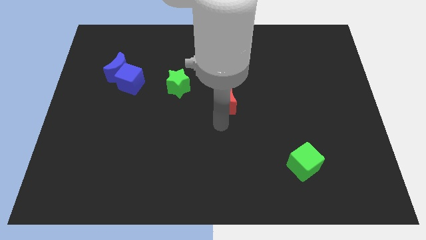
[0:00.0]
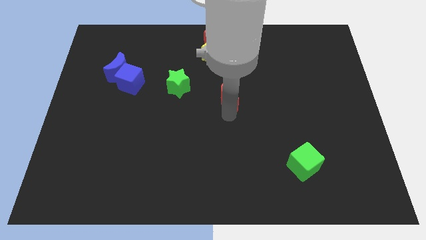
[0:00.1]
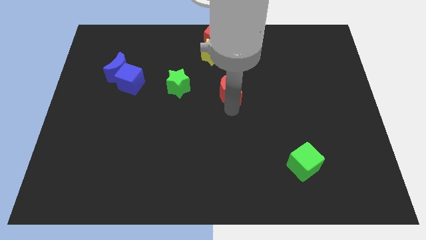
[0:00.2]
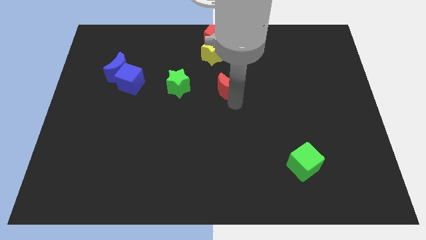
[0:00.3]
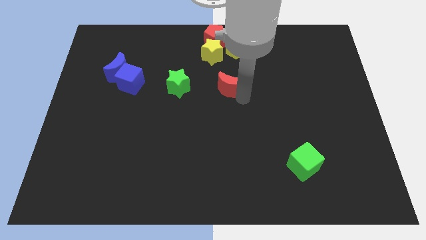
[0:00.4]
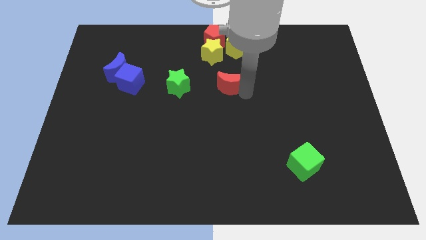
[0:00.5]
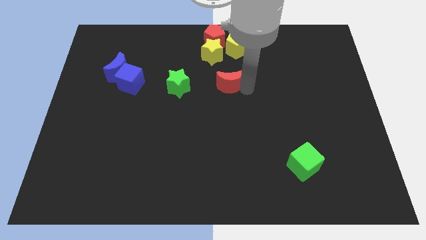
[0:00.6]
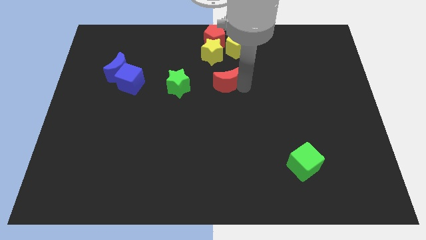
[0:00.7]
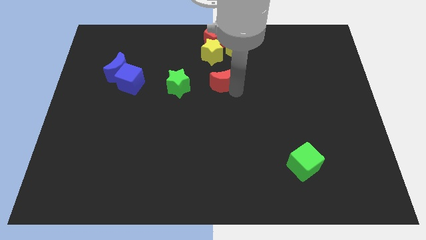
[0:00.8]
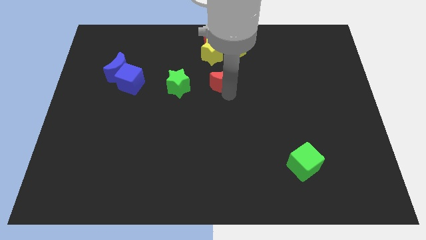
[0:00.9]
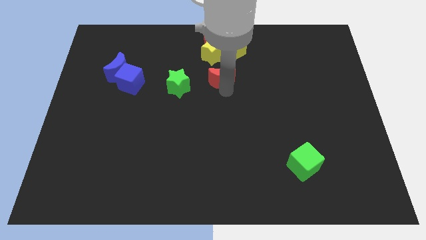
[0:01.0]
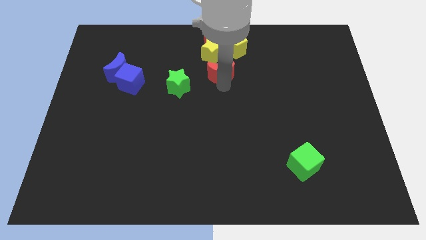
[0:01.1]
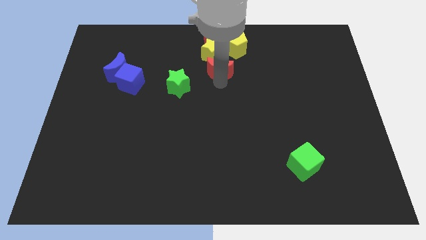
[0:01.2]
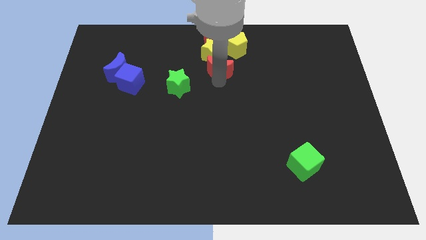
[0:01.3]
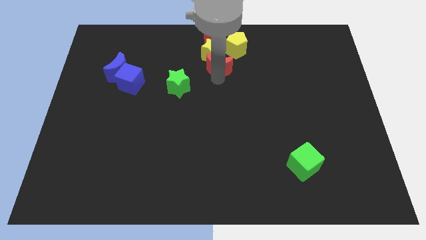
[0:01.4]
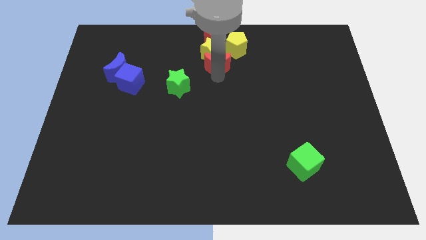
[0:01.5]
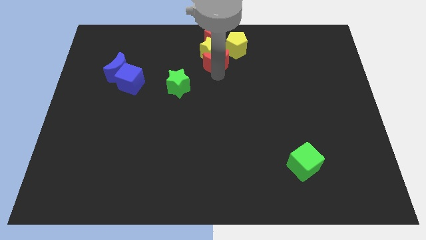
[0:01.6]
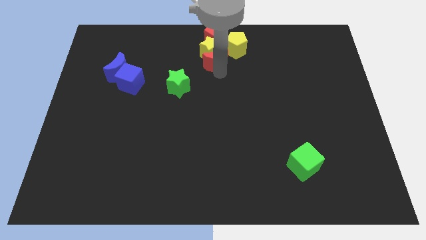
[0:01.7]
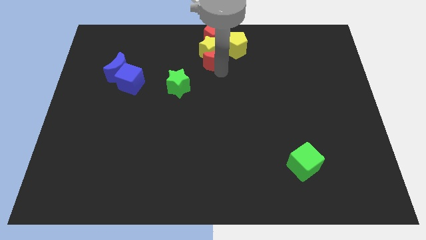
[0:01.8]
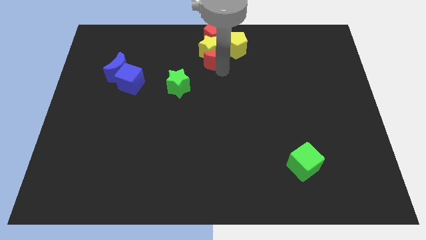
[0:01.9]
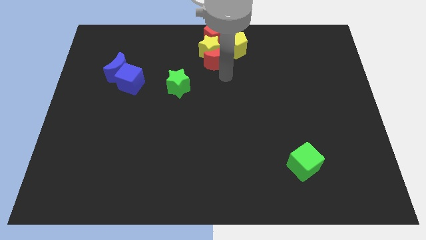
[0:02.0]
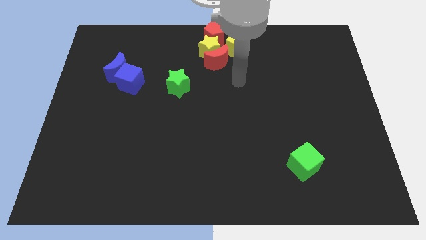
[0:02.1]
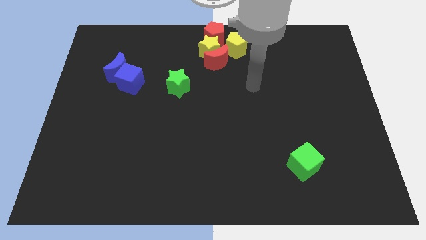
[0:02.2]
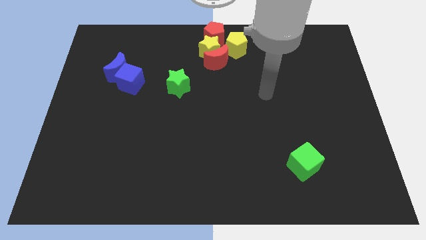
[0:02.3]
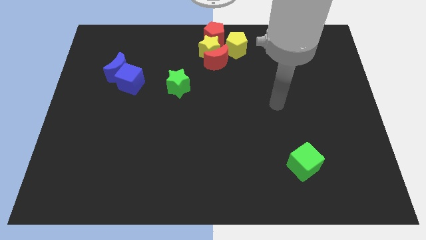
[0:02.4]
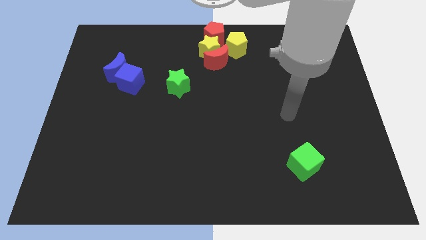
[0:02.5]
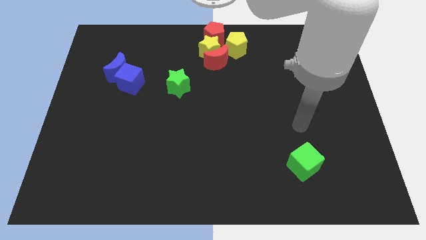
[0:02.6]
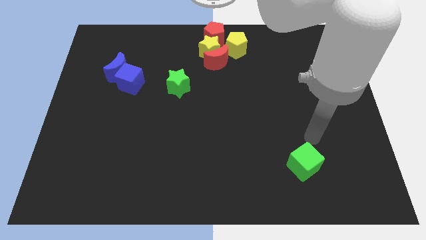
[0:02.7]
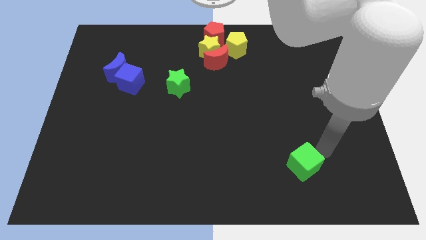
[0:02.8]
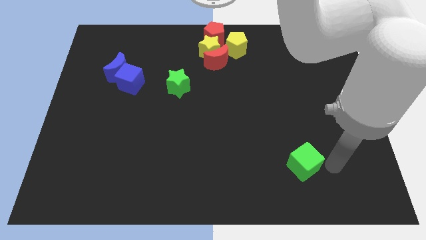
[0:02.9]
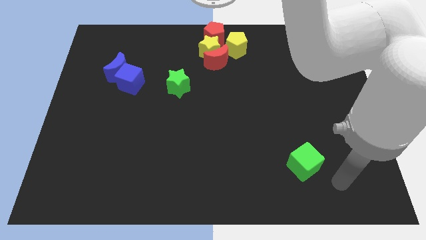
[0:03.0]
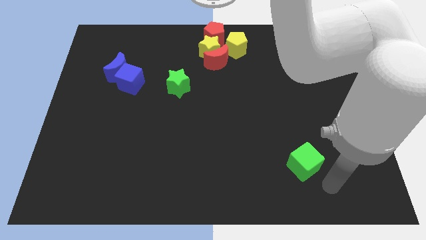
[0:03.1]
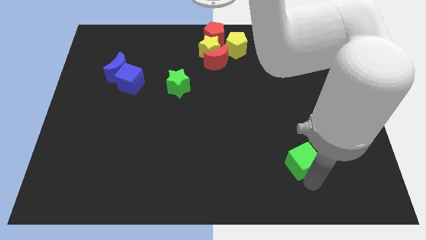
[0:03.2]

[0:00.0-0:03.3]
push the red crescent into the yellow star

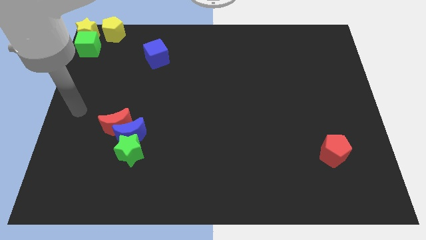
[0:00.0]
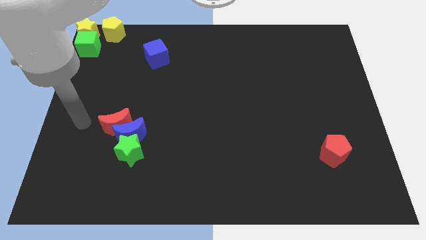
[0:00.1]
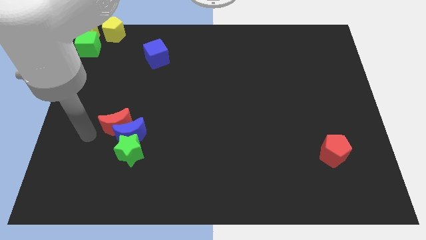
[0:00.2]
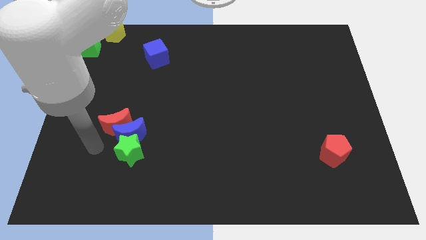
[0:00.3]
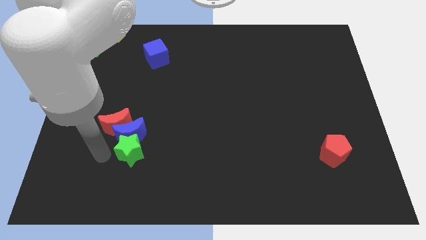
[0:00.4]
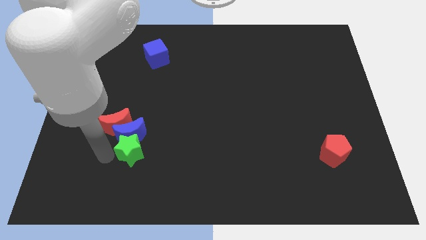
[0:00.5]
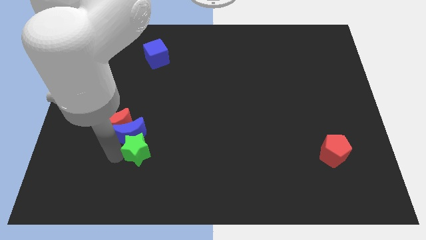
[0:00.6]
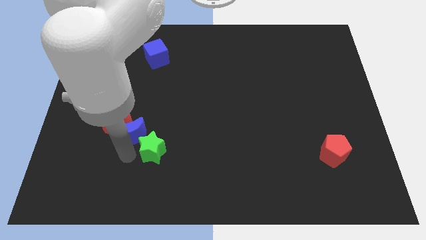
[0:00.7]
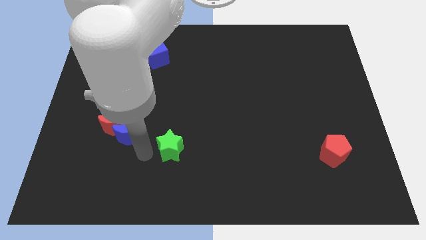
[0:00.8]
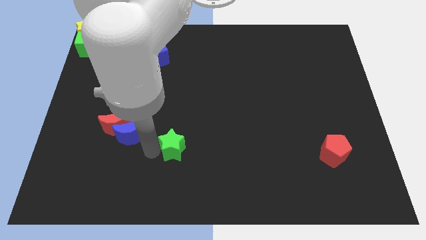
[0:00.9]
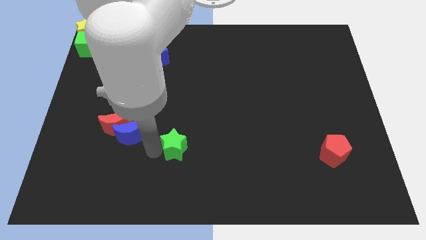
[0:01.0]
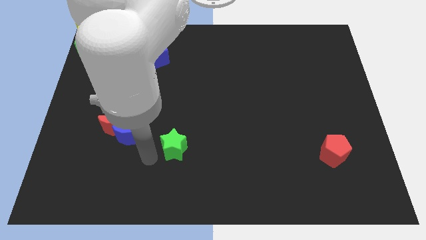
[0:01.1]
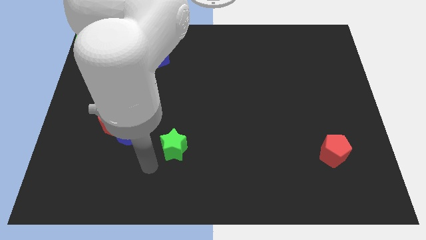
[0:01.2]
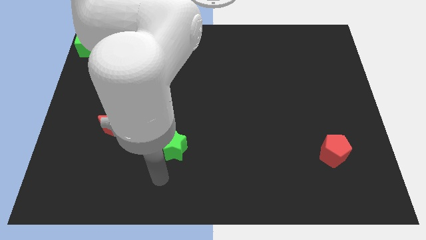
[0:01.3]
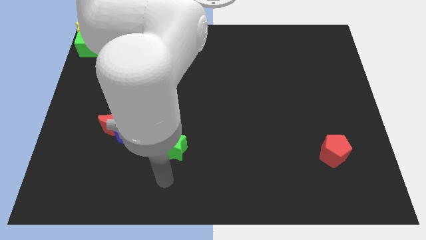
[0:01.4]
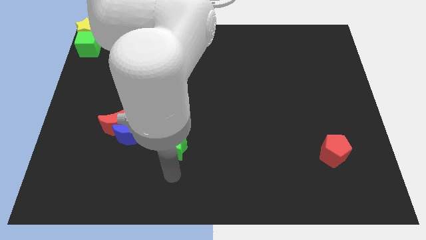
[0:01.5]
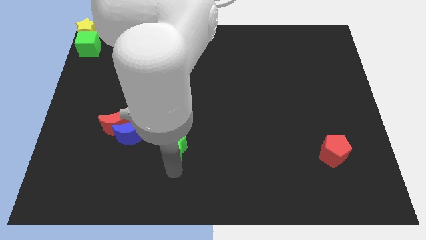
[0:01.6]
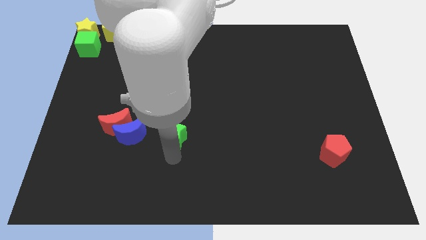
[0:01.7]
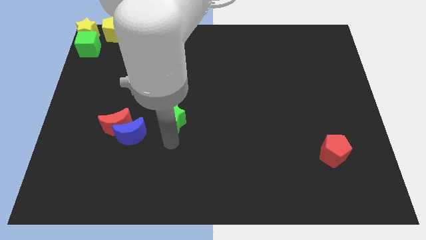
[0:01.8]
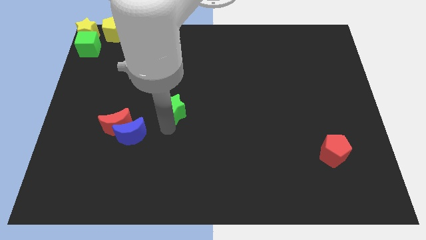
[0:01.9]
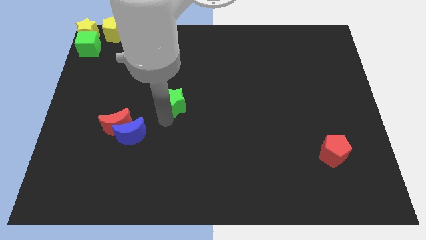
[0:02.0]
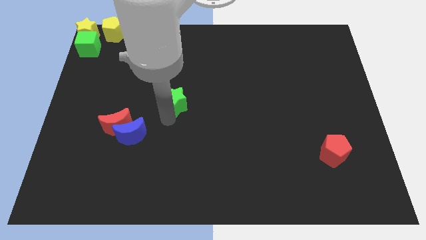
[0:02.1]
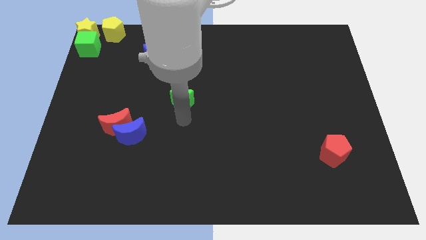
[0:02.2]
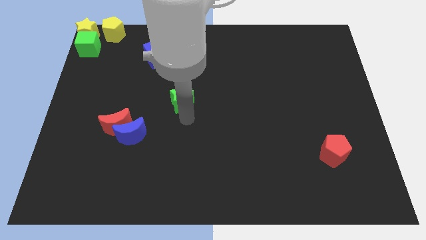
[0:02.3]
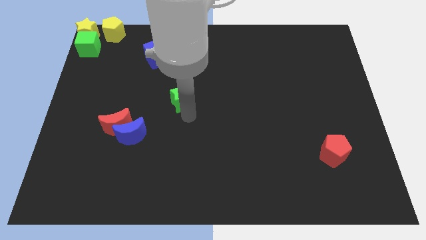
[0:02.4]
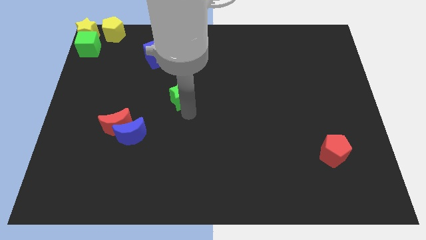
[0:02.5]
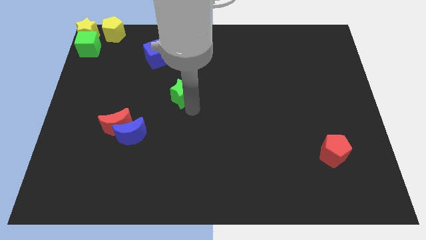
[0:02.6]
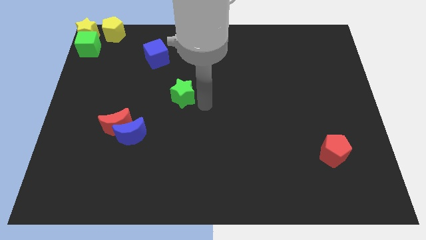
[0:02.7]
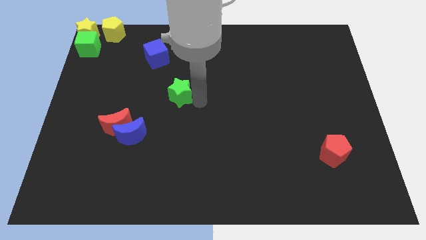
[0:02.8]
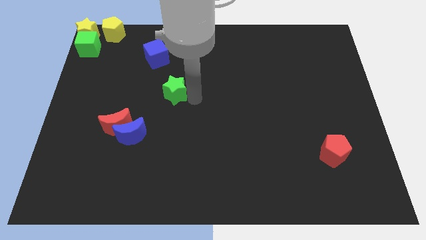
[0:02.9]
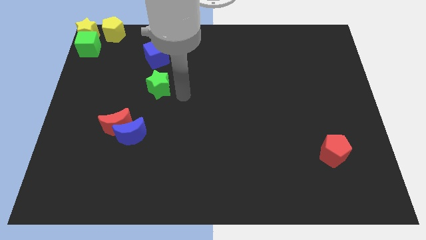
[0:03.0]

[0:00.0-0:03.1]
separate the green star away from blue moon

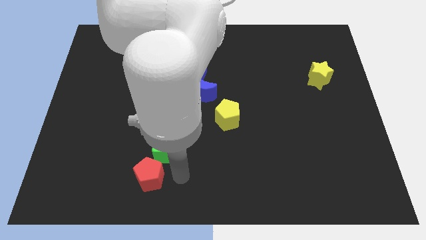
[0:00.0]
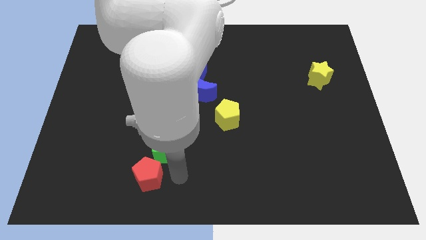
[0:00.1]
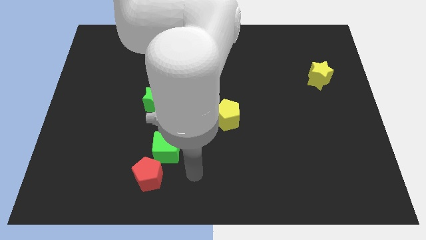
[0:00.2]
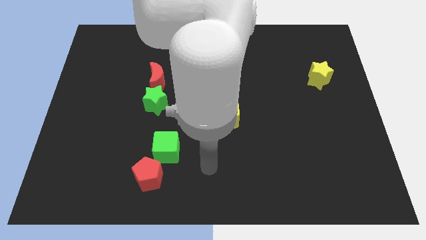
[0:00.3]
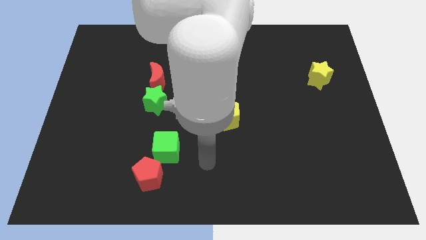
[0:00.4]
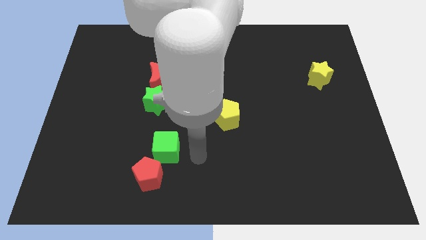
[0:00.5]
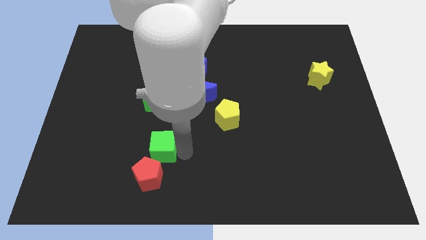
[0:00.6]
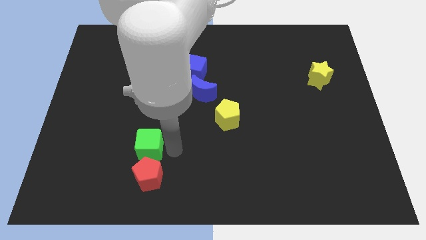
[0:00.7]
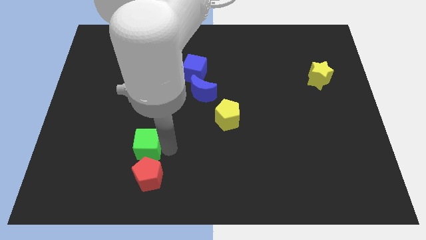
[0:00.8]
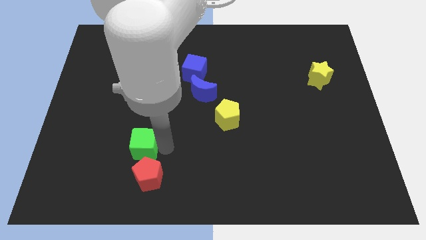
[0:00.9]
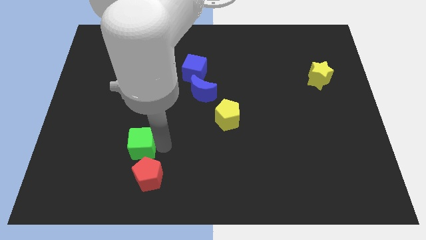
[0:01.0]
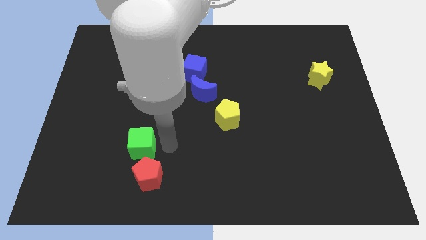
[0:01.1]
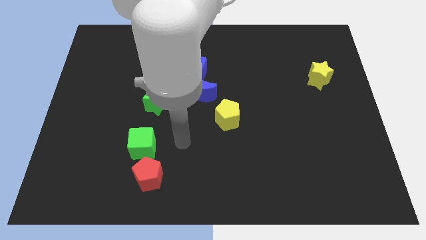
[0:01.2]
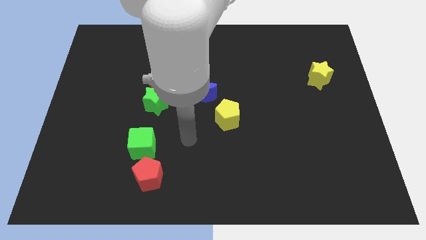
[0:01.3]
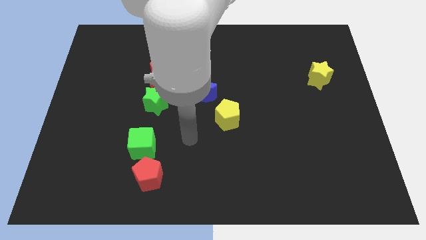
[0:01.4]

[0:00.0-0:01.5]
place the green cube above the red pentagon

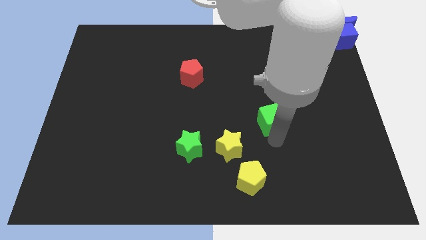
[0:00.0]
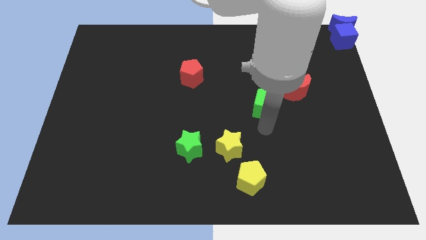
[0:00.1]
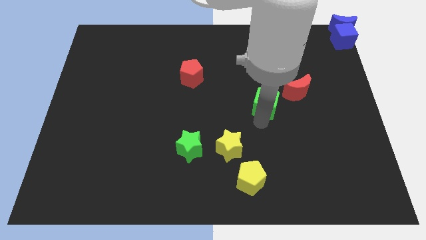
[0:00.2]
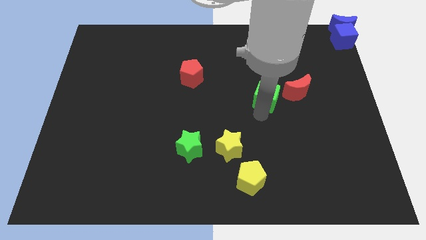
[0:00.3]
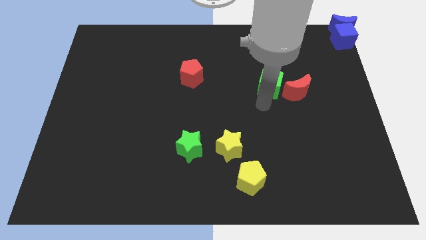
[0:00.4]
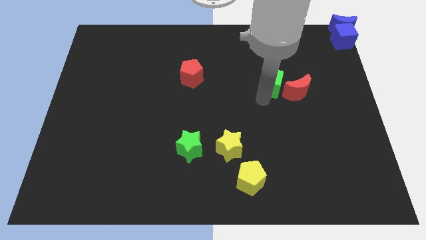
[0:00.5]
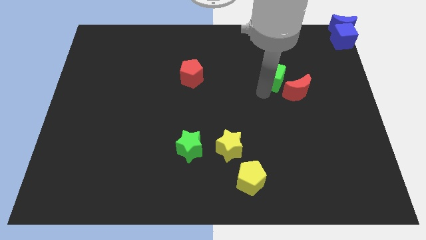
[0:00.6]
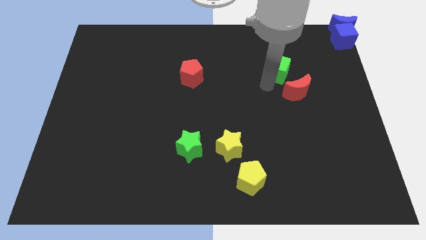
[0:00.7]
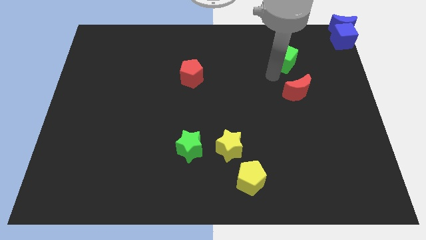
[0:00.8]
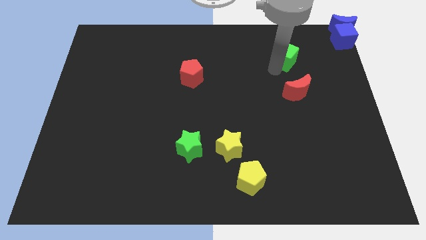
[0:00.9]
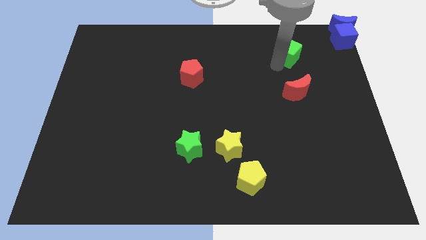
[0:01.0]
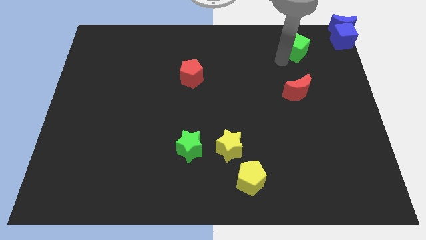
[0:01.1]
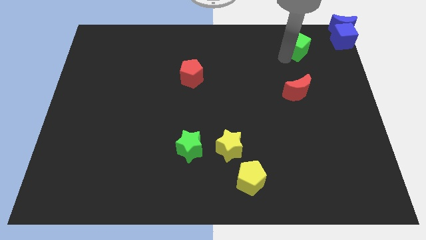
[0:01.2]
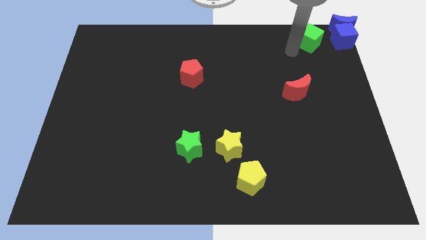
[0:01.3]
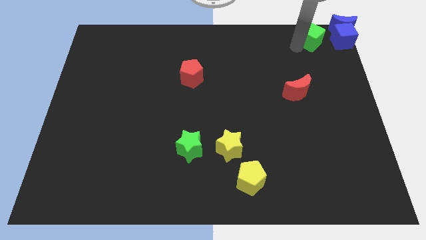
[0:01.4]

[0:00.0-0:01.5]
slide green cube towards blue blocks
